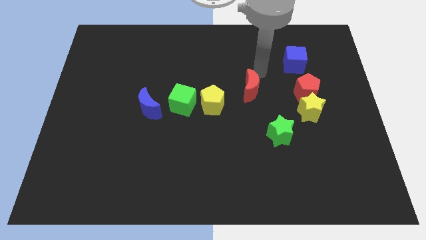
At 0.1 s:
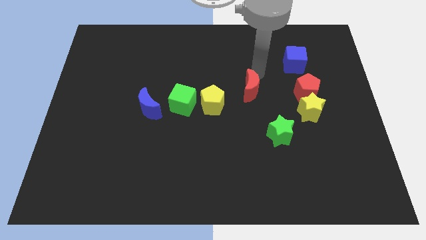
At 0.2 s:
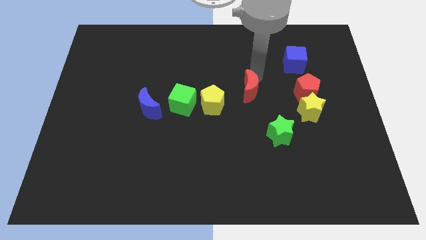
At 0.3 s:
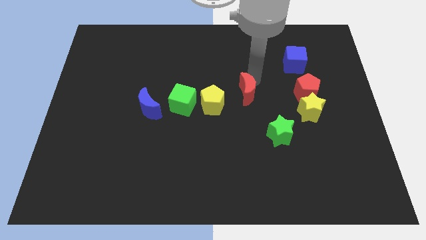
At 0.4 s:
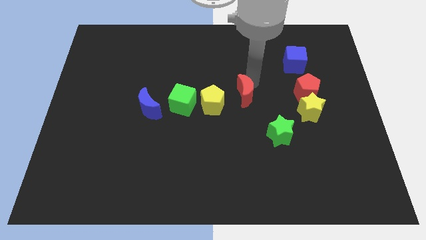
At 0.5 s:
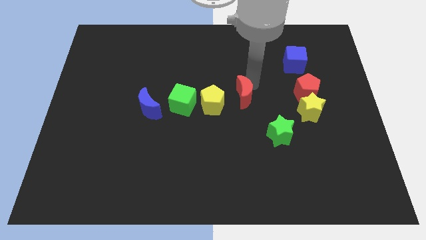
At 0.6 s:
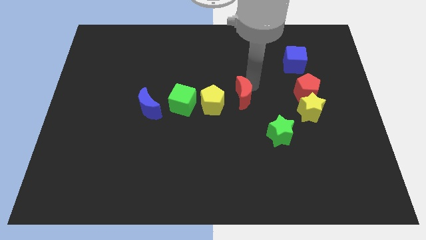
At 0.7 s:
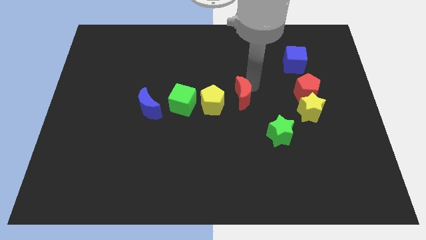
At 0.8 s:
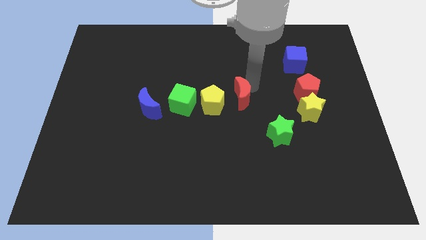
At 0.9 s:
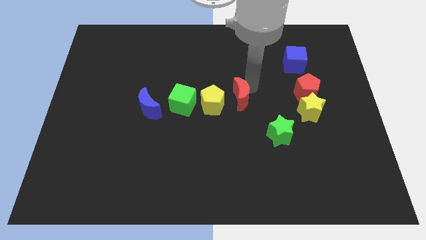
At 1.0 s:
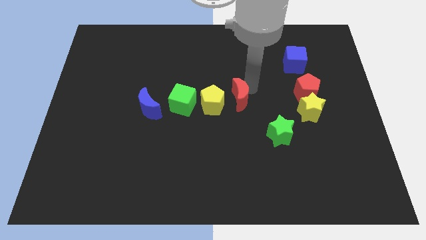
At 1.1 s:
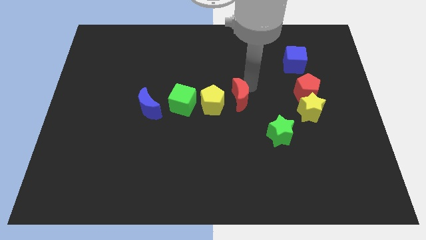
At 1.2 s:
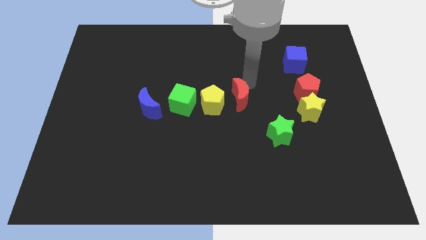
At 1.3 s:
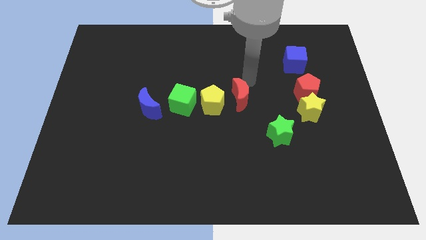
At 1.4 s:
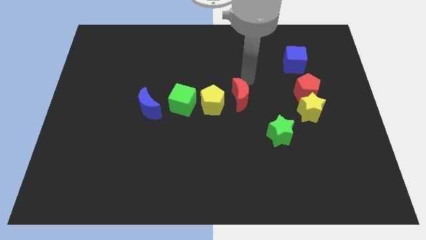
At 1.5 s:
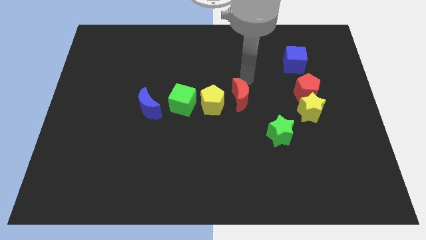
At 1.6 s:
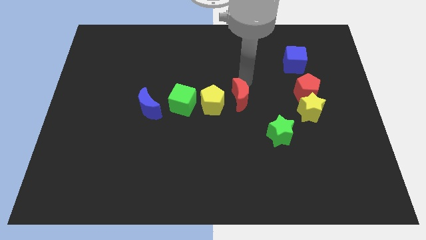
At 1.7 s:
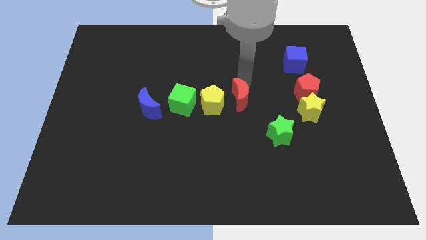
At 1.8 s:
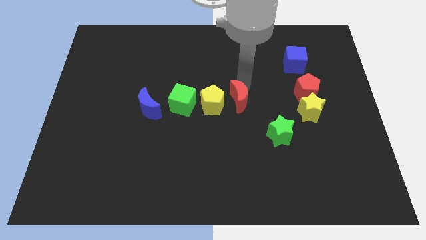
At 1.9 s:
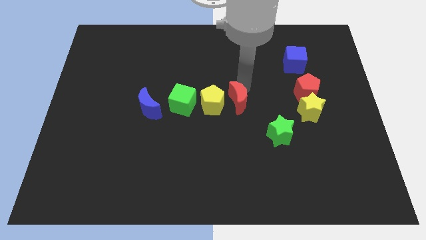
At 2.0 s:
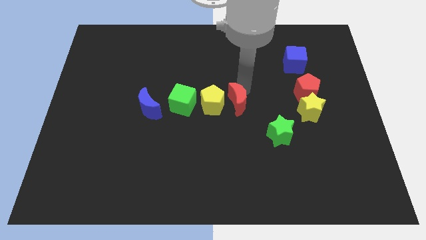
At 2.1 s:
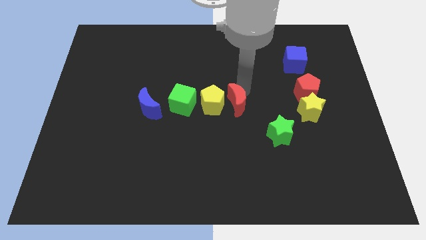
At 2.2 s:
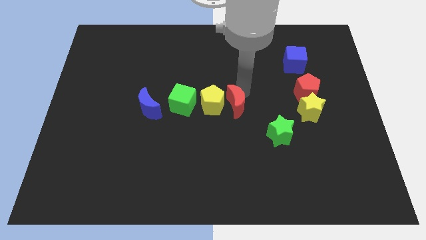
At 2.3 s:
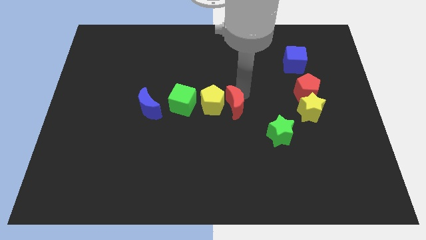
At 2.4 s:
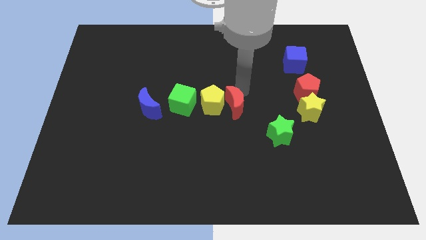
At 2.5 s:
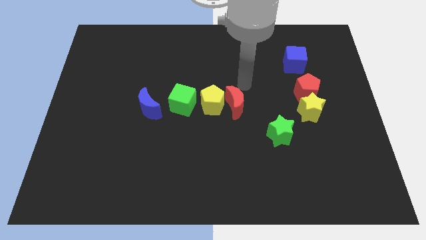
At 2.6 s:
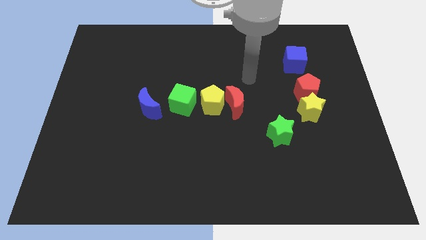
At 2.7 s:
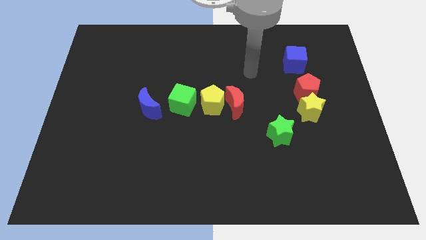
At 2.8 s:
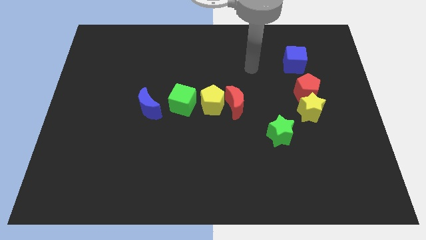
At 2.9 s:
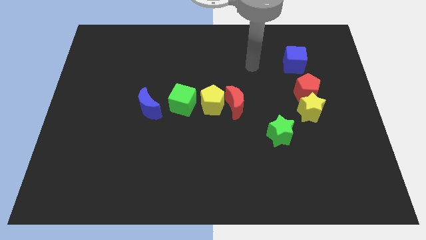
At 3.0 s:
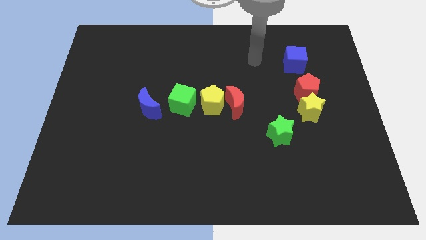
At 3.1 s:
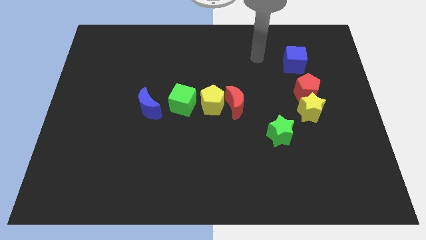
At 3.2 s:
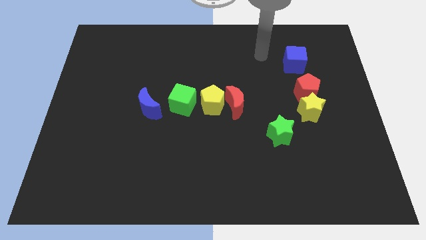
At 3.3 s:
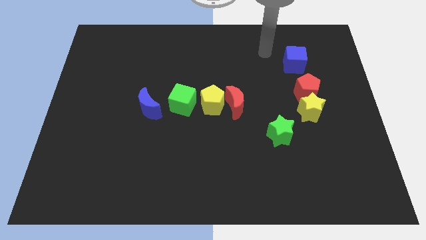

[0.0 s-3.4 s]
push the red moon right to the yellow pentagon

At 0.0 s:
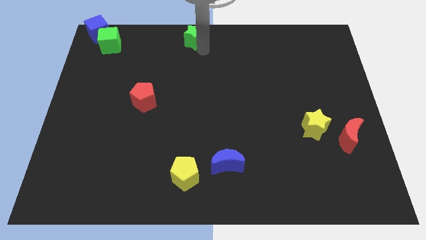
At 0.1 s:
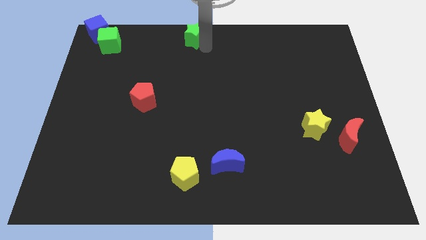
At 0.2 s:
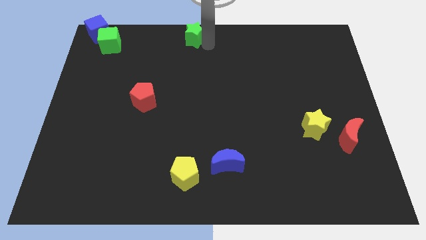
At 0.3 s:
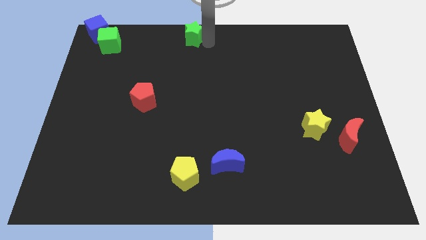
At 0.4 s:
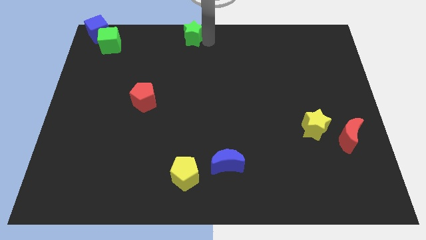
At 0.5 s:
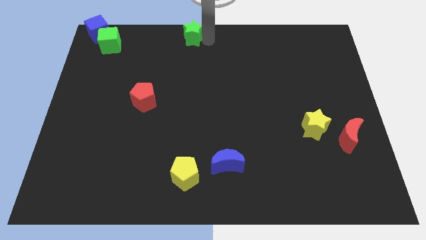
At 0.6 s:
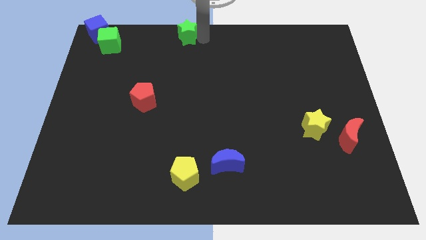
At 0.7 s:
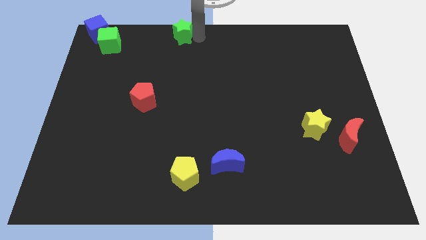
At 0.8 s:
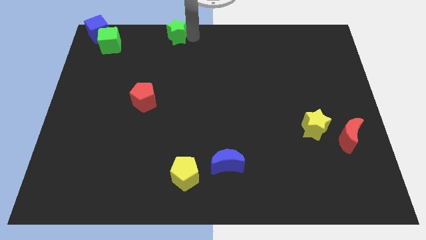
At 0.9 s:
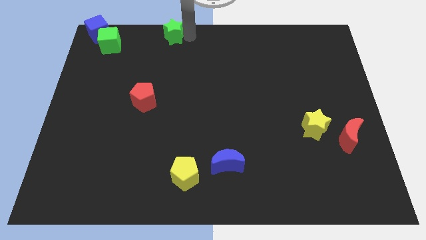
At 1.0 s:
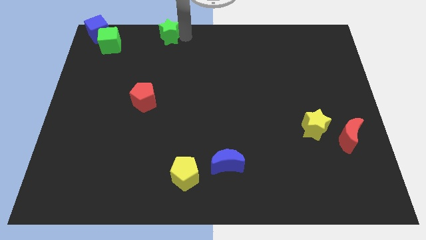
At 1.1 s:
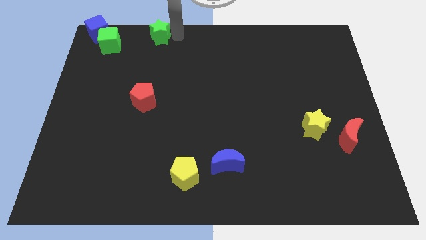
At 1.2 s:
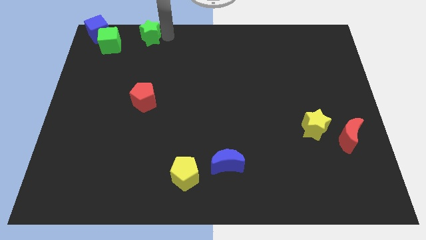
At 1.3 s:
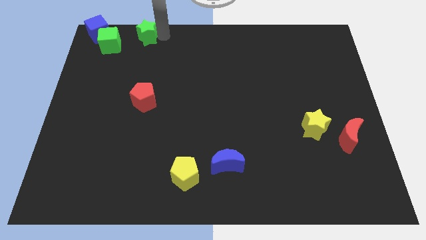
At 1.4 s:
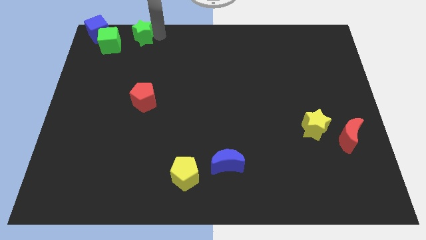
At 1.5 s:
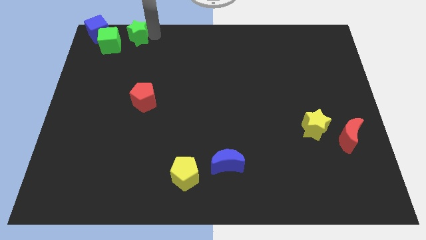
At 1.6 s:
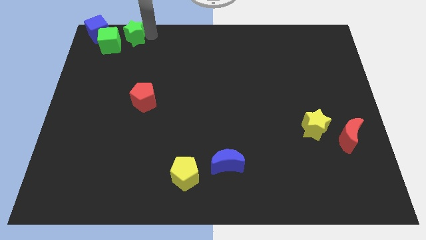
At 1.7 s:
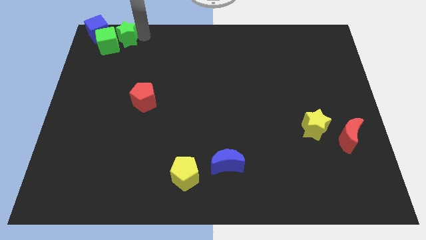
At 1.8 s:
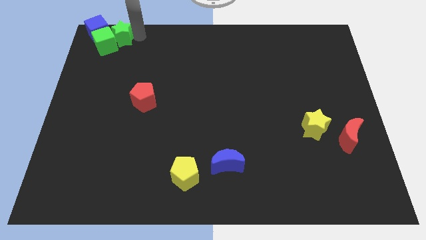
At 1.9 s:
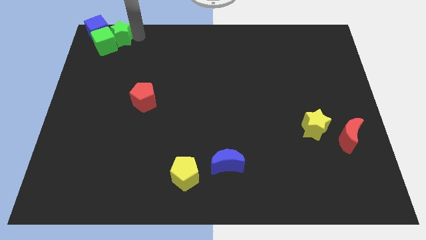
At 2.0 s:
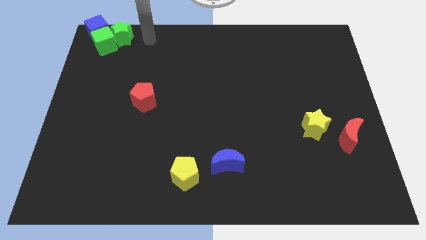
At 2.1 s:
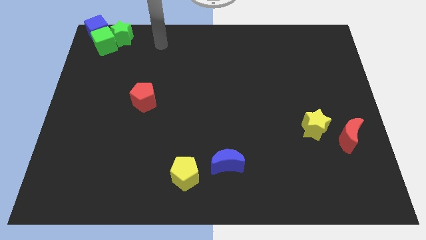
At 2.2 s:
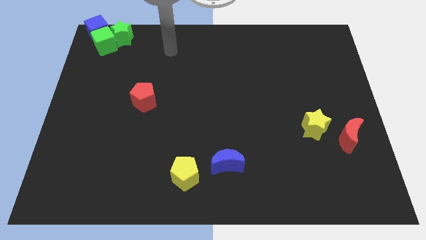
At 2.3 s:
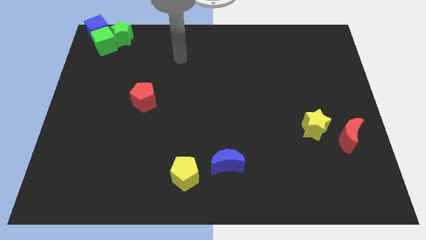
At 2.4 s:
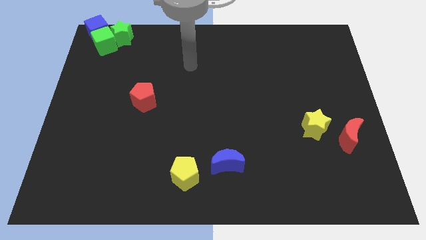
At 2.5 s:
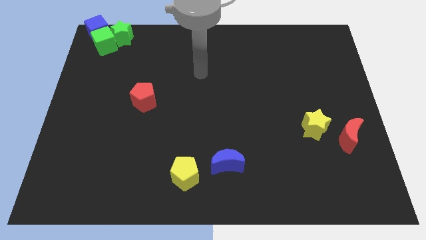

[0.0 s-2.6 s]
move the green star into the green cube to the right

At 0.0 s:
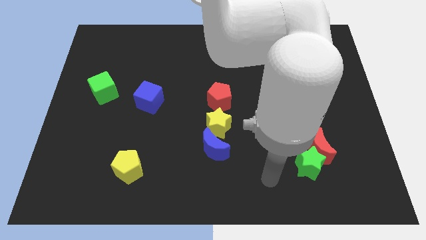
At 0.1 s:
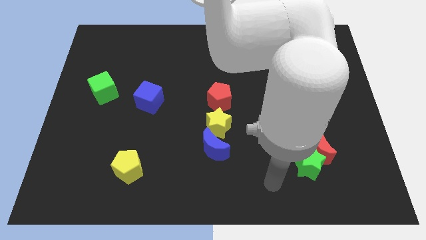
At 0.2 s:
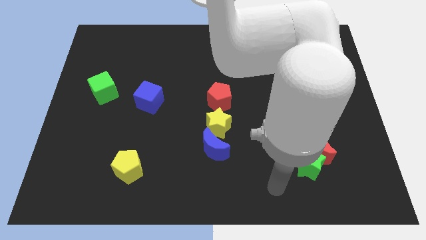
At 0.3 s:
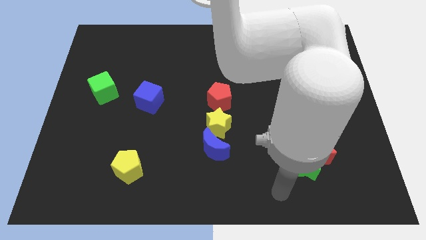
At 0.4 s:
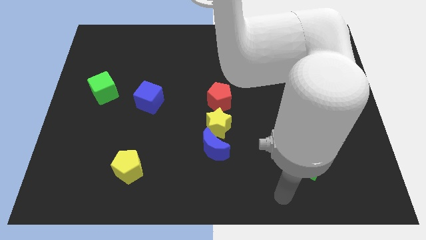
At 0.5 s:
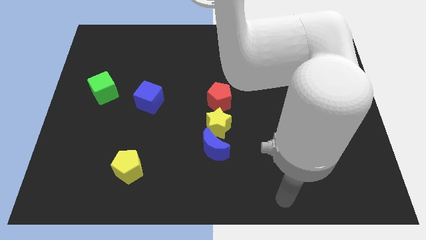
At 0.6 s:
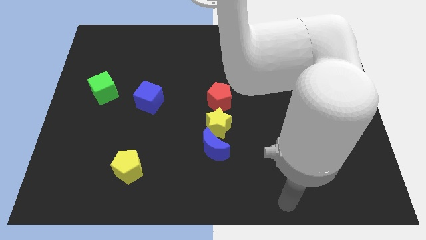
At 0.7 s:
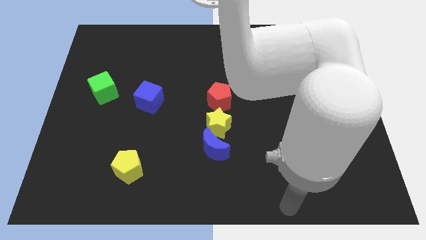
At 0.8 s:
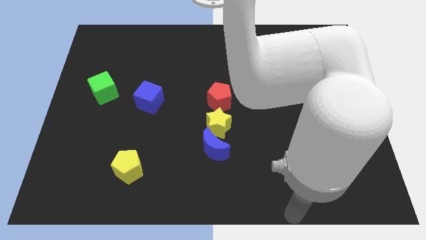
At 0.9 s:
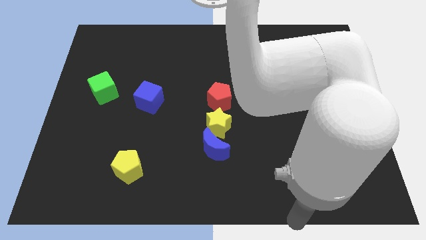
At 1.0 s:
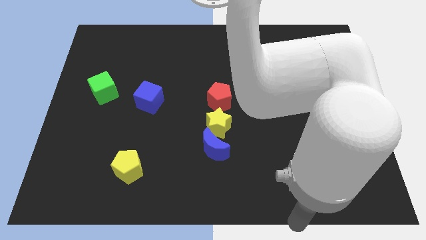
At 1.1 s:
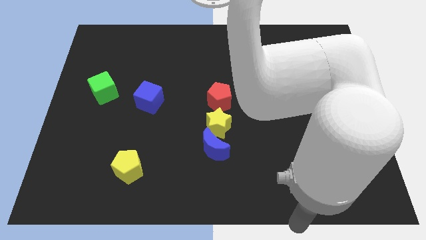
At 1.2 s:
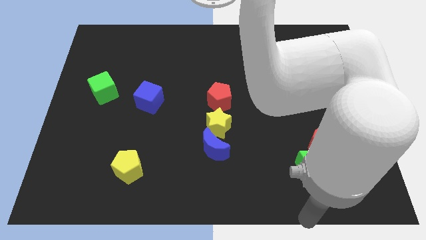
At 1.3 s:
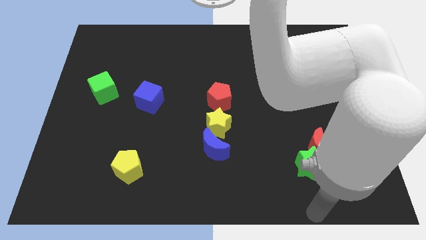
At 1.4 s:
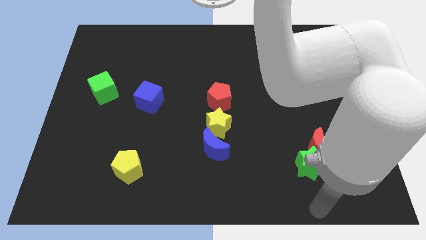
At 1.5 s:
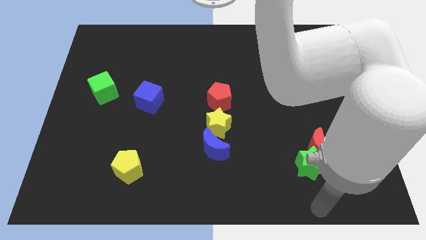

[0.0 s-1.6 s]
place your arm towards the bottom of the board

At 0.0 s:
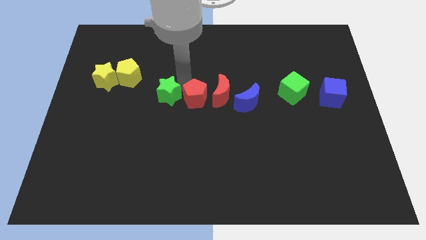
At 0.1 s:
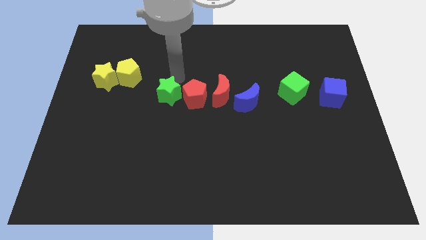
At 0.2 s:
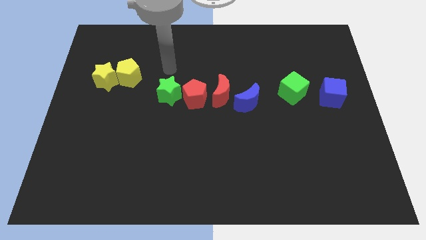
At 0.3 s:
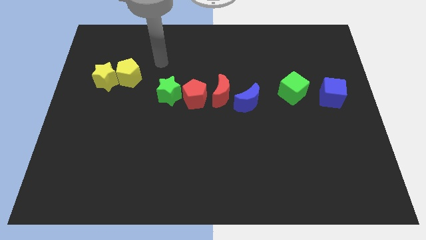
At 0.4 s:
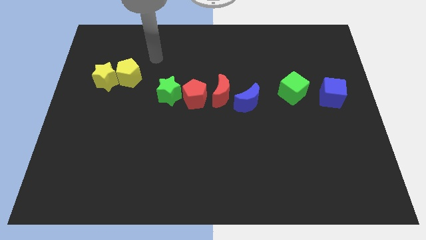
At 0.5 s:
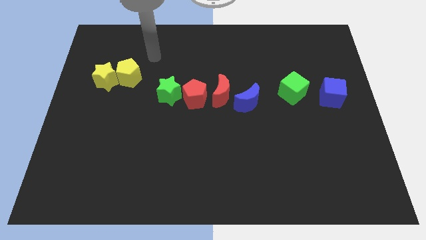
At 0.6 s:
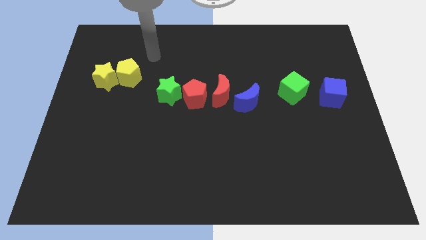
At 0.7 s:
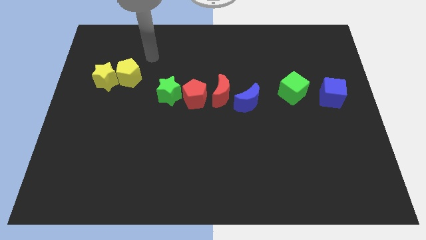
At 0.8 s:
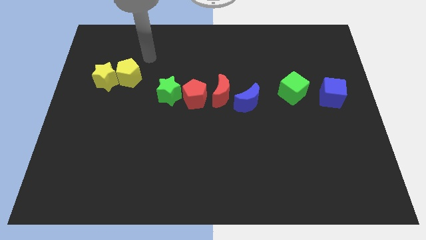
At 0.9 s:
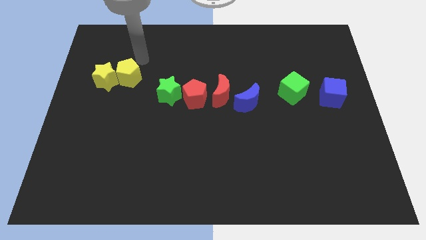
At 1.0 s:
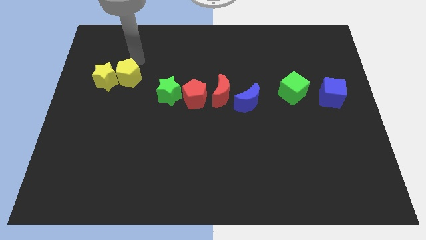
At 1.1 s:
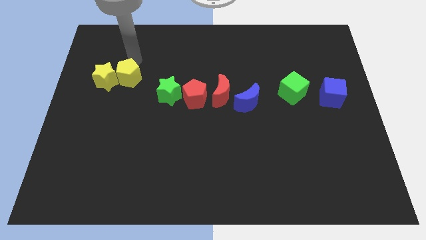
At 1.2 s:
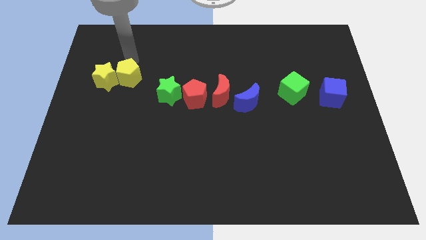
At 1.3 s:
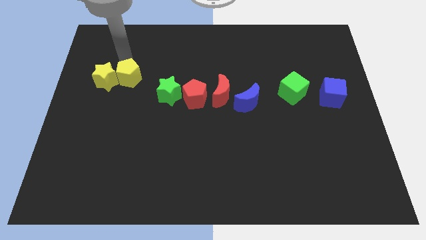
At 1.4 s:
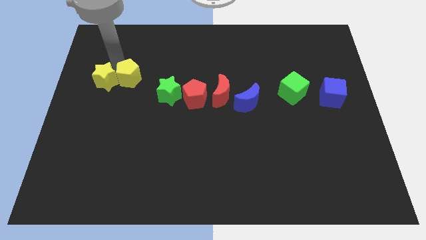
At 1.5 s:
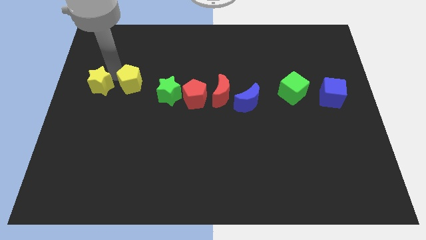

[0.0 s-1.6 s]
touch the top side of the yellow blocks
